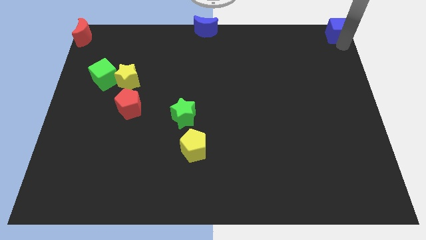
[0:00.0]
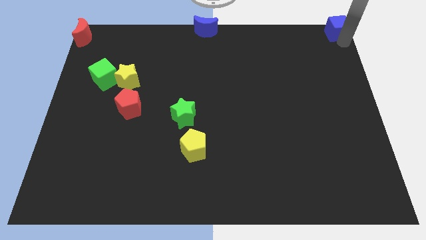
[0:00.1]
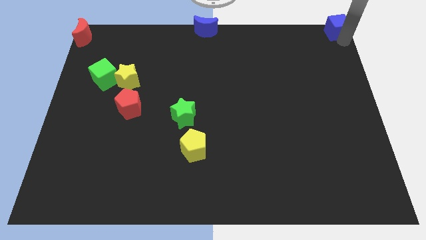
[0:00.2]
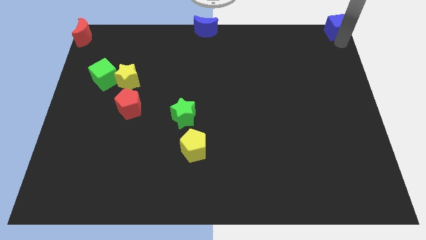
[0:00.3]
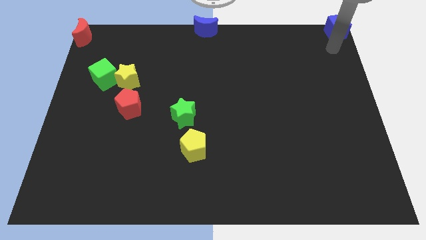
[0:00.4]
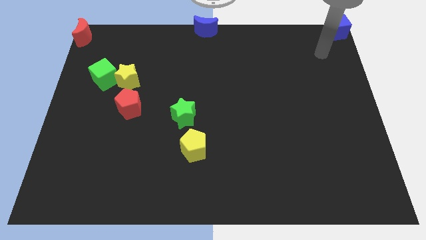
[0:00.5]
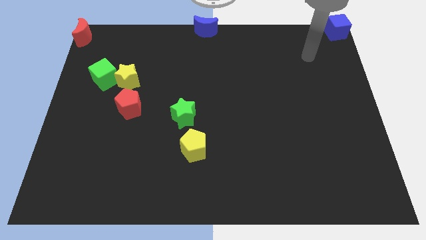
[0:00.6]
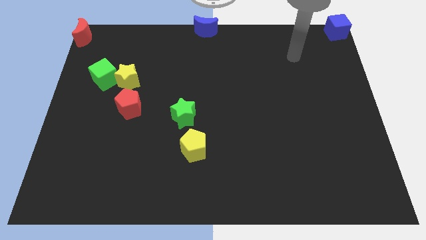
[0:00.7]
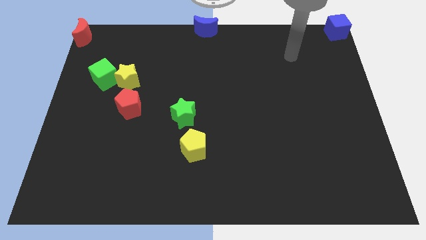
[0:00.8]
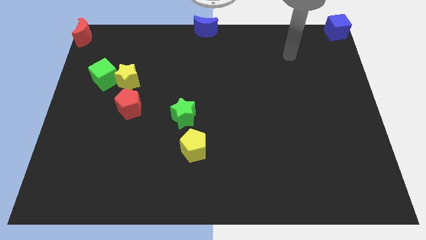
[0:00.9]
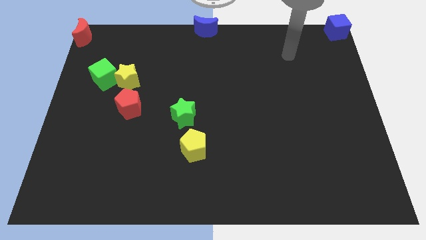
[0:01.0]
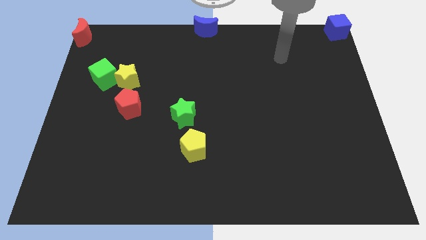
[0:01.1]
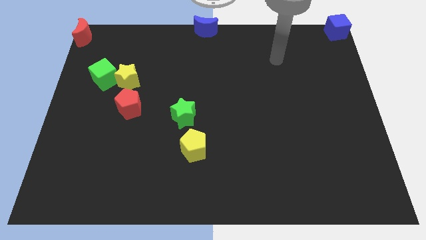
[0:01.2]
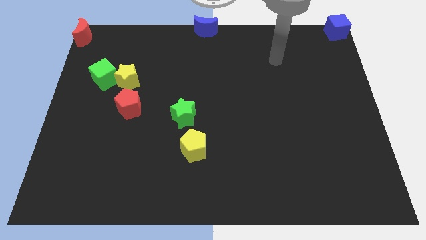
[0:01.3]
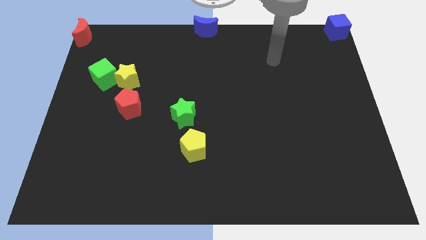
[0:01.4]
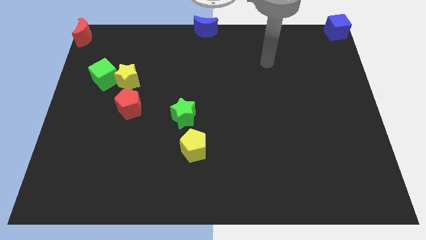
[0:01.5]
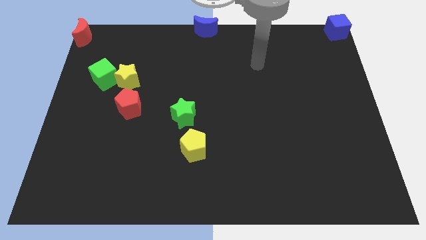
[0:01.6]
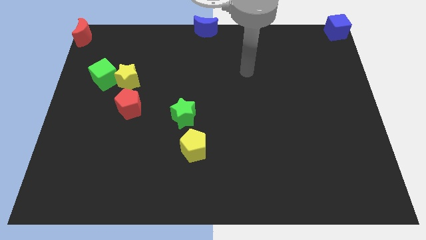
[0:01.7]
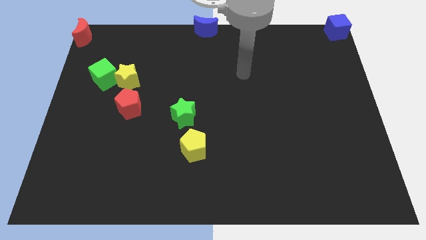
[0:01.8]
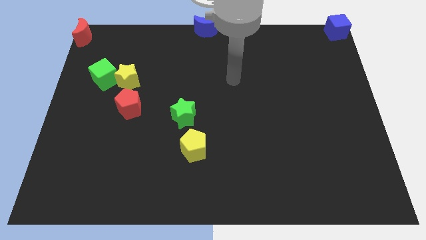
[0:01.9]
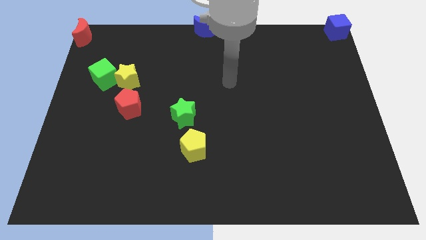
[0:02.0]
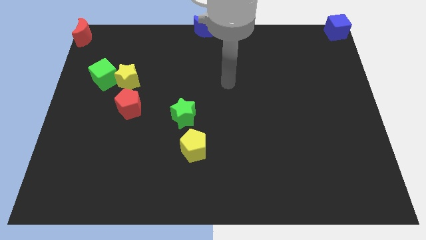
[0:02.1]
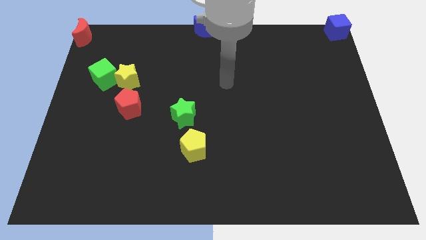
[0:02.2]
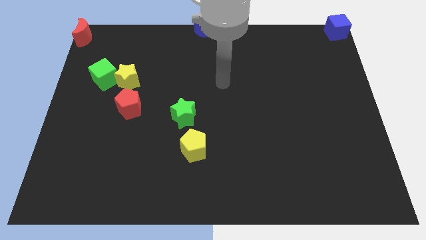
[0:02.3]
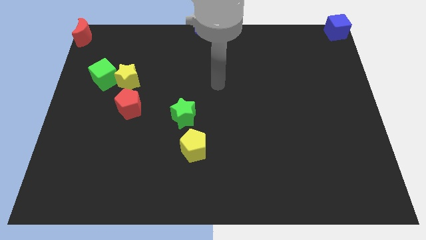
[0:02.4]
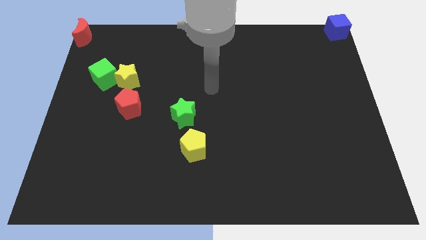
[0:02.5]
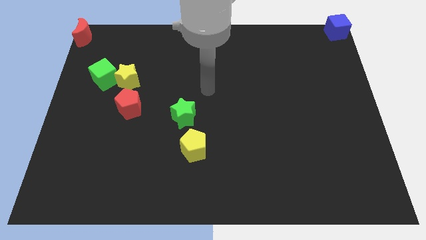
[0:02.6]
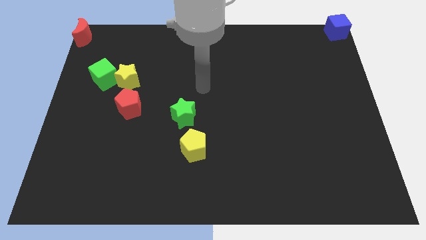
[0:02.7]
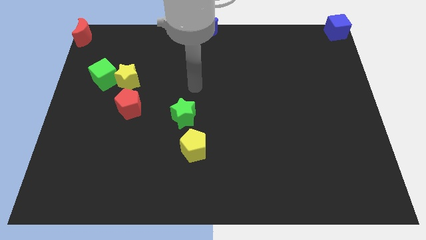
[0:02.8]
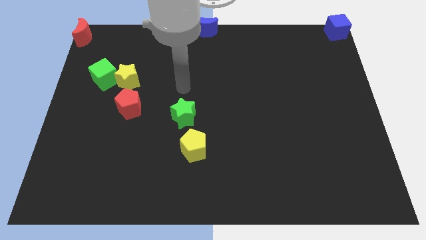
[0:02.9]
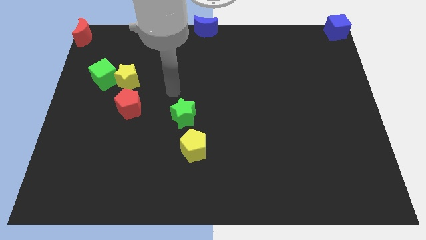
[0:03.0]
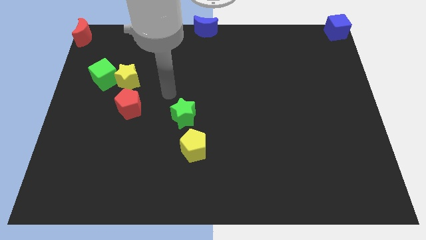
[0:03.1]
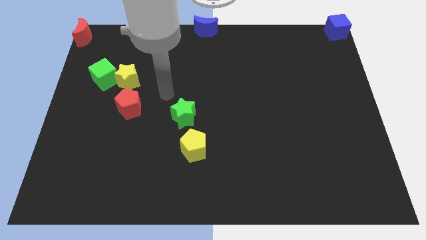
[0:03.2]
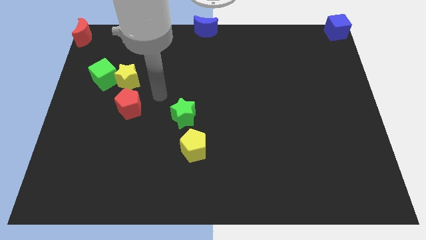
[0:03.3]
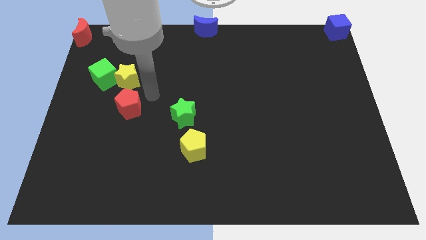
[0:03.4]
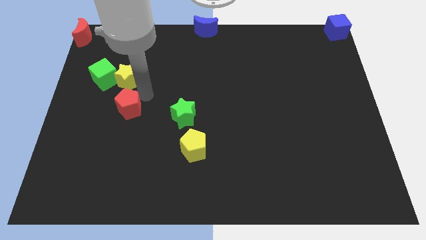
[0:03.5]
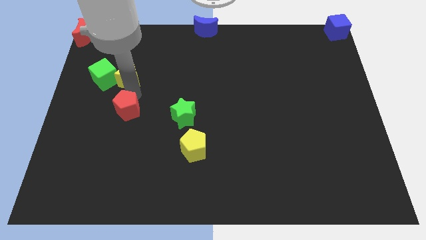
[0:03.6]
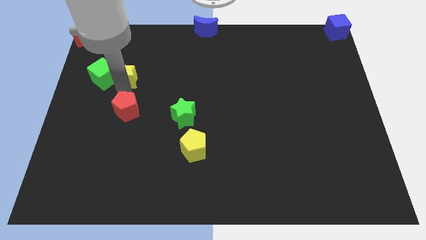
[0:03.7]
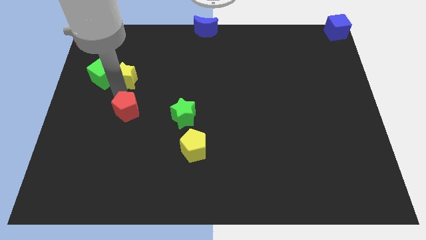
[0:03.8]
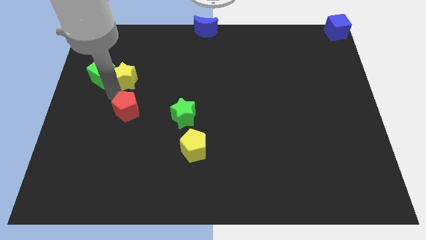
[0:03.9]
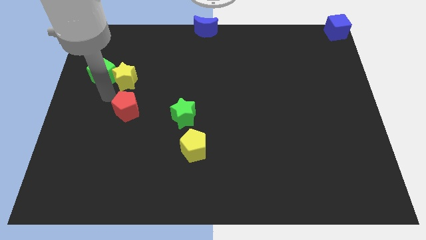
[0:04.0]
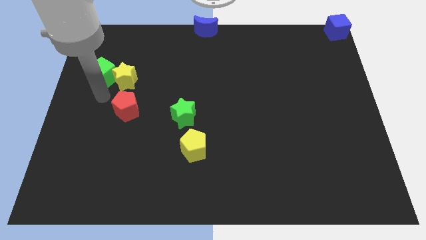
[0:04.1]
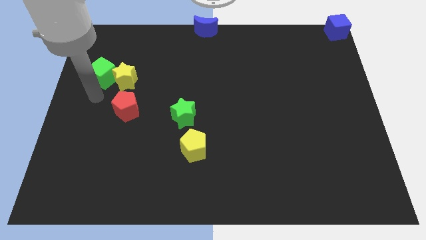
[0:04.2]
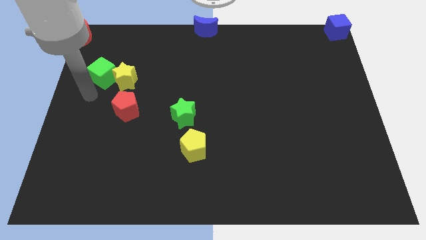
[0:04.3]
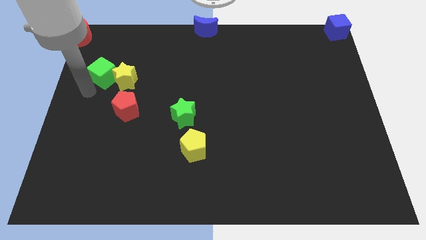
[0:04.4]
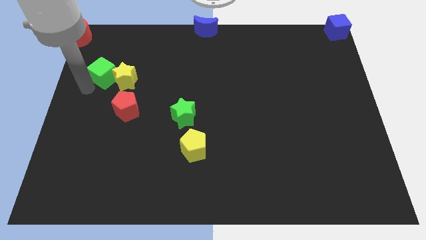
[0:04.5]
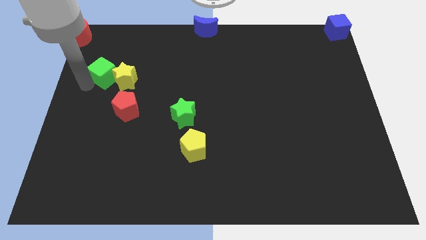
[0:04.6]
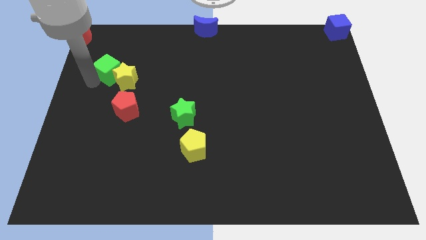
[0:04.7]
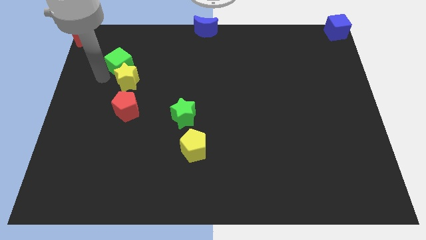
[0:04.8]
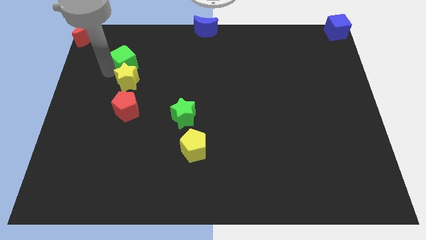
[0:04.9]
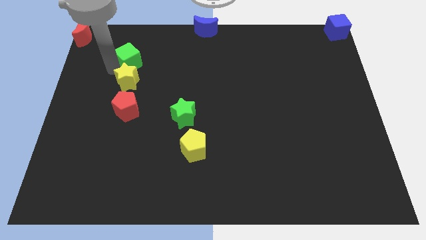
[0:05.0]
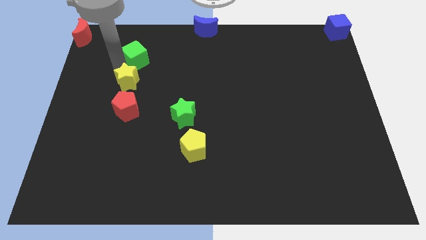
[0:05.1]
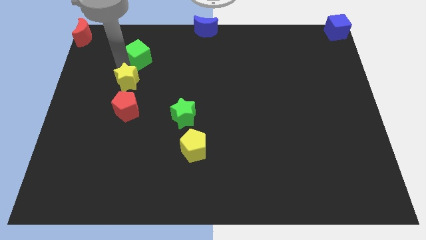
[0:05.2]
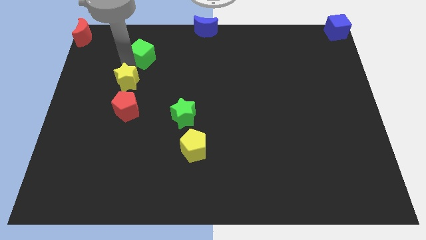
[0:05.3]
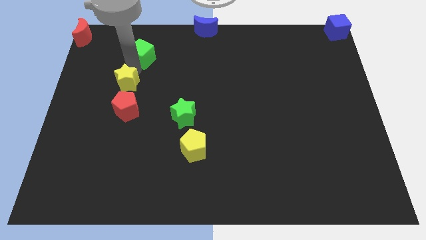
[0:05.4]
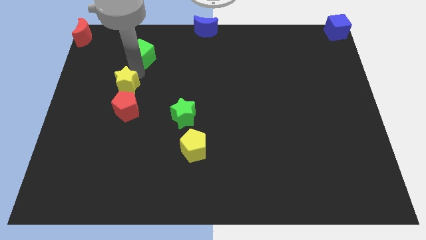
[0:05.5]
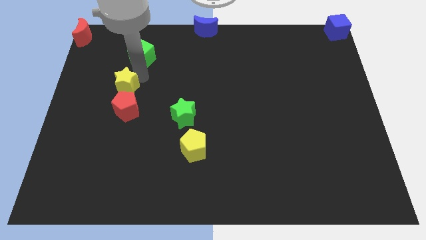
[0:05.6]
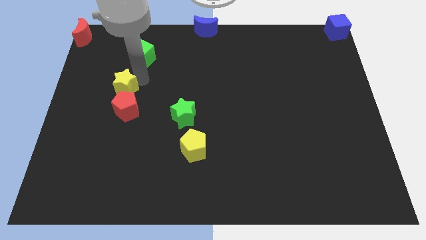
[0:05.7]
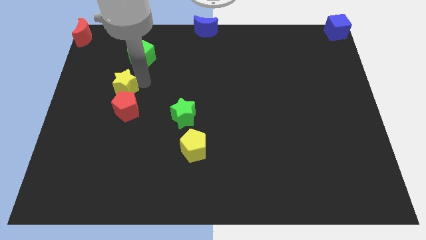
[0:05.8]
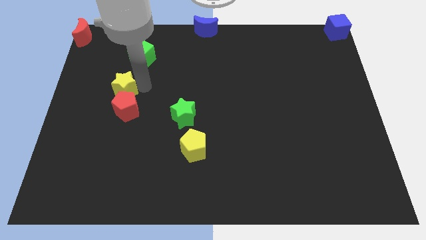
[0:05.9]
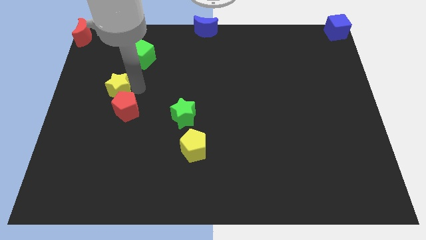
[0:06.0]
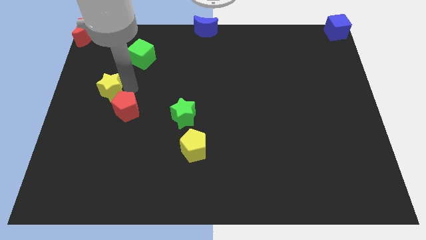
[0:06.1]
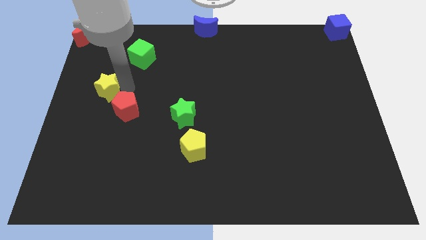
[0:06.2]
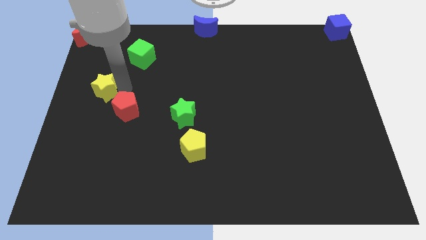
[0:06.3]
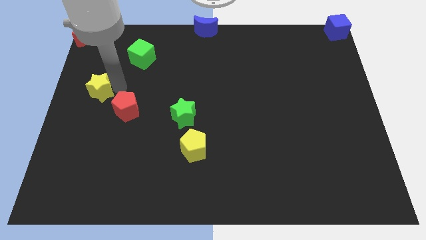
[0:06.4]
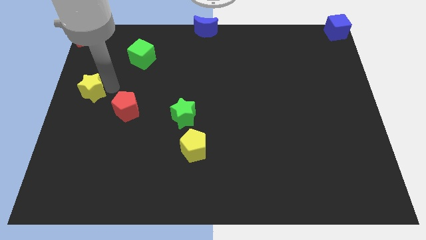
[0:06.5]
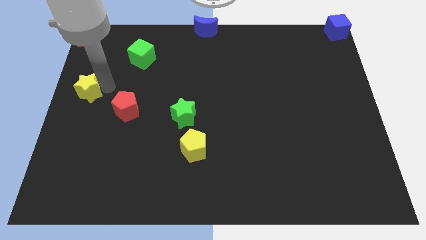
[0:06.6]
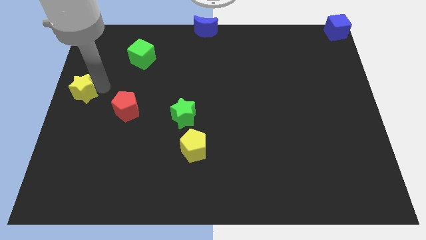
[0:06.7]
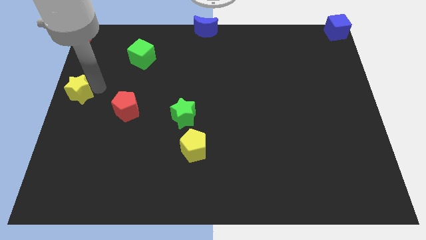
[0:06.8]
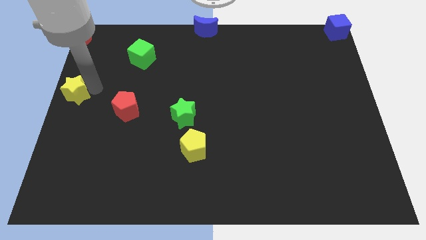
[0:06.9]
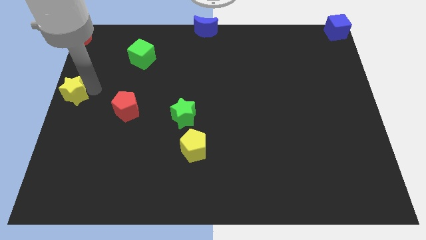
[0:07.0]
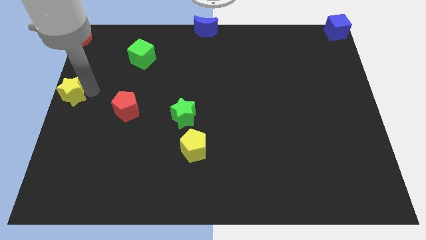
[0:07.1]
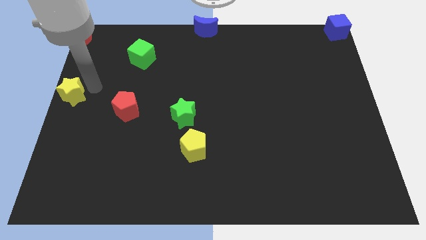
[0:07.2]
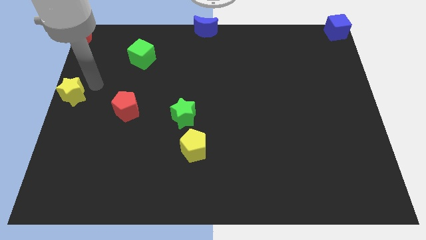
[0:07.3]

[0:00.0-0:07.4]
move the yellow star to the left center of the board

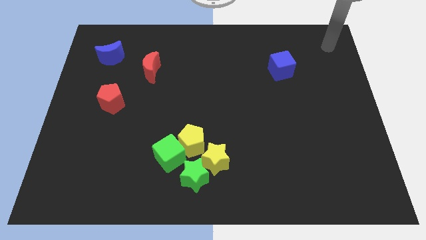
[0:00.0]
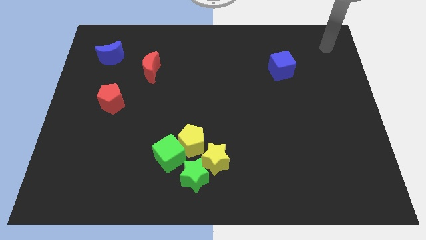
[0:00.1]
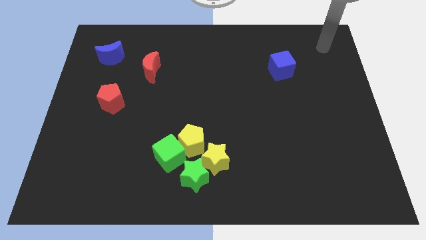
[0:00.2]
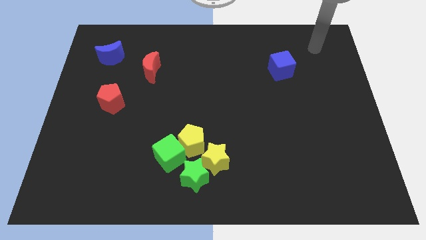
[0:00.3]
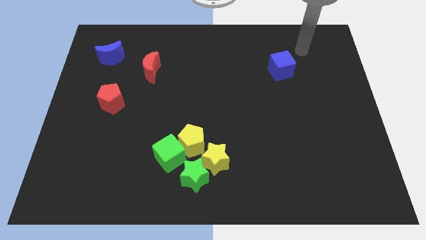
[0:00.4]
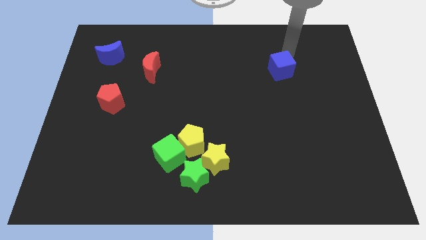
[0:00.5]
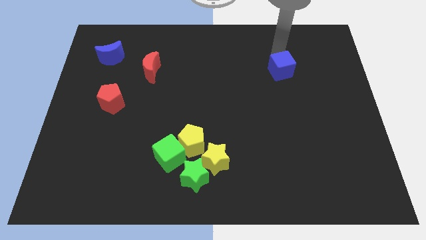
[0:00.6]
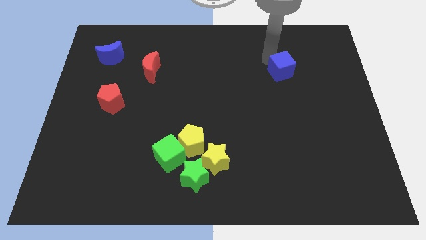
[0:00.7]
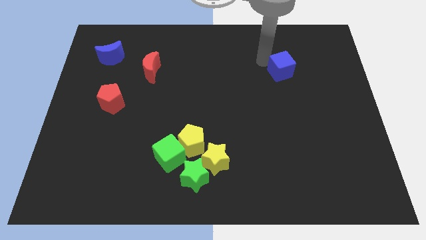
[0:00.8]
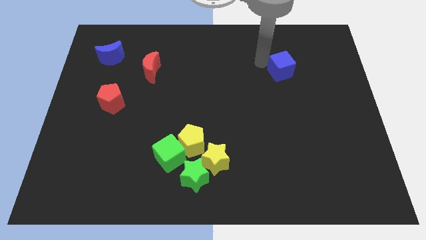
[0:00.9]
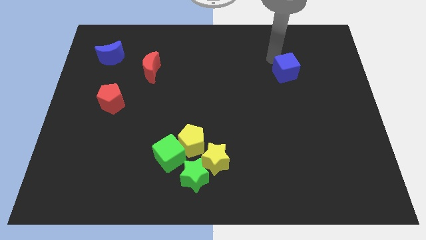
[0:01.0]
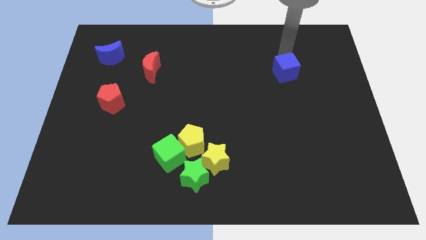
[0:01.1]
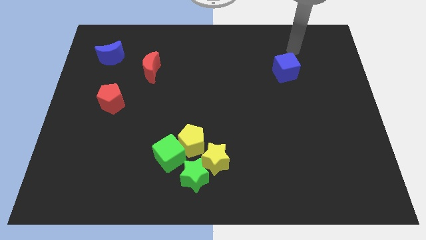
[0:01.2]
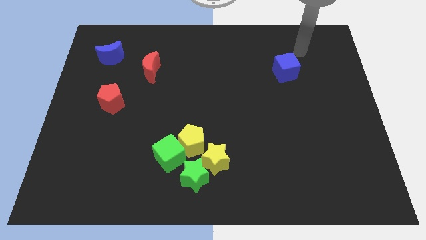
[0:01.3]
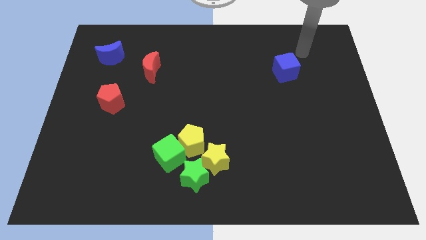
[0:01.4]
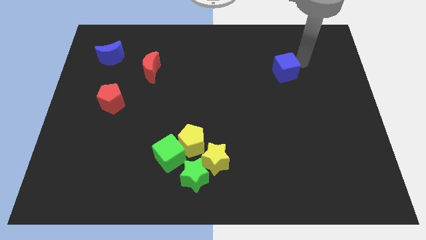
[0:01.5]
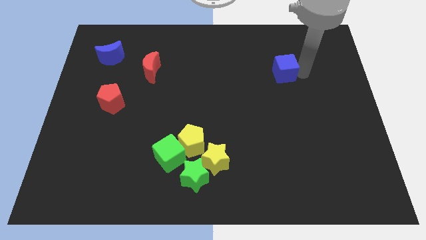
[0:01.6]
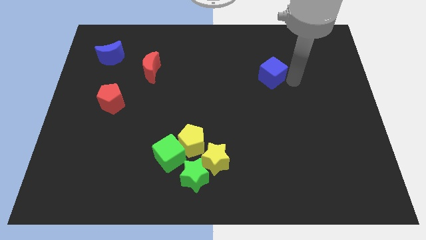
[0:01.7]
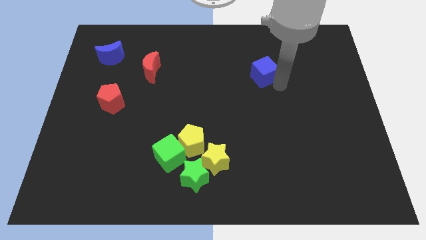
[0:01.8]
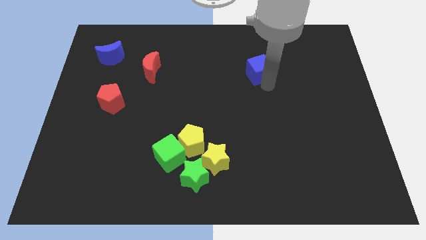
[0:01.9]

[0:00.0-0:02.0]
move the blue cube towards the red moon
